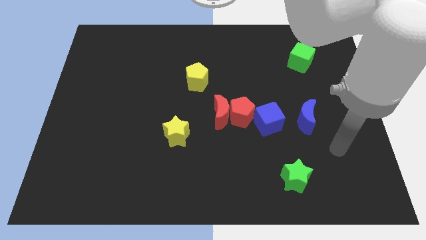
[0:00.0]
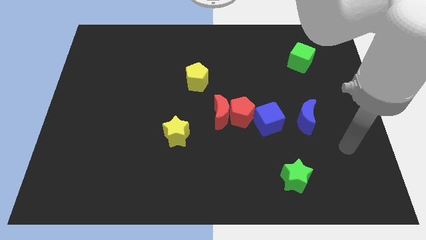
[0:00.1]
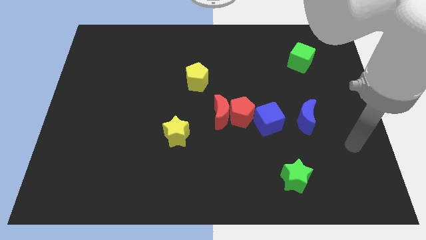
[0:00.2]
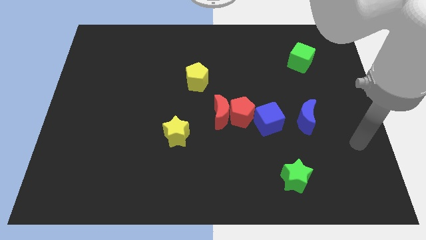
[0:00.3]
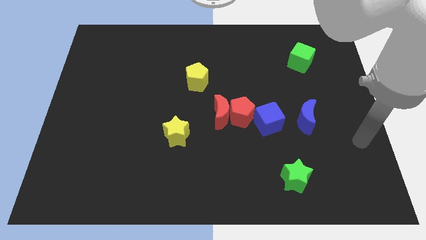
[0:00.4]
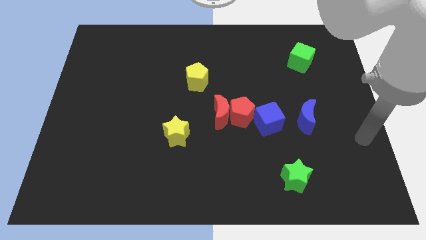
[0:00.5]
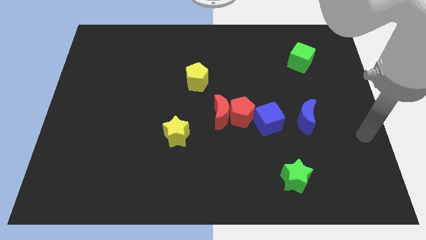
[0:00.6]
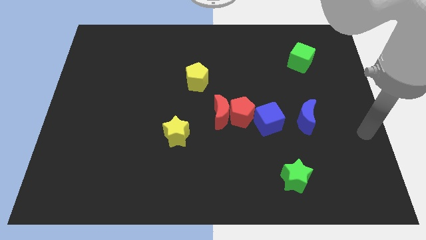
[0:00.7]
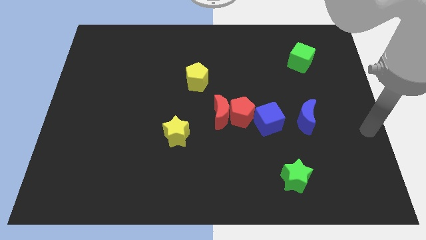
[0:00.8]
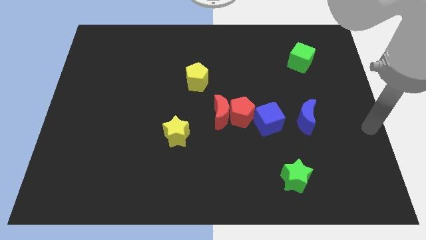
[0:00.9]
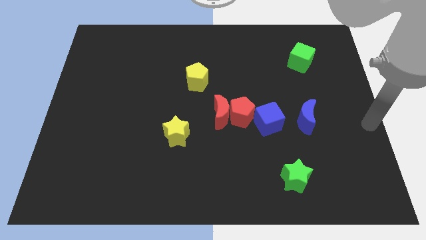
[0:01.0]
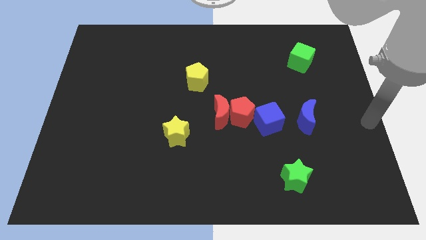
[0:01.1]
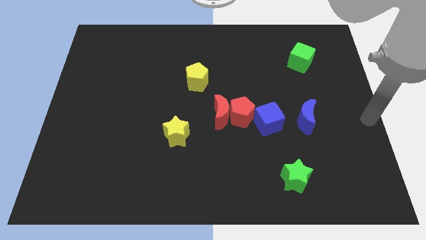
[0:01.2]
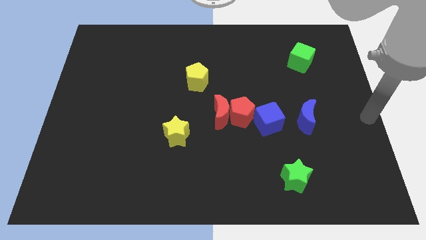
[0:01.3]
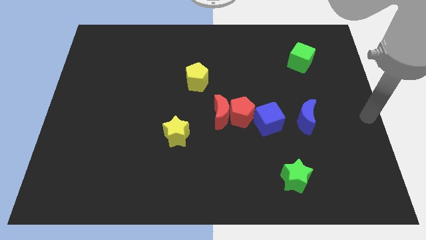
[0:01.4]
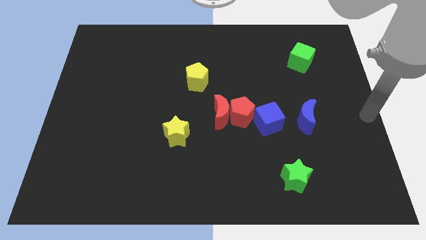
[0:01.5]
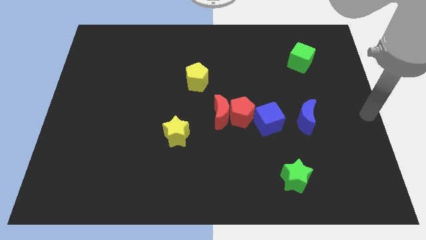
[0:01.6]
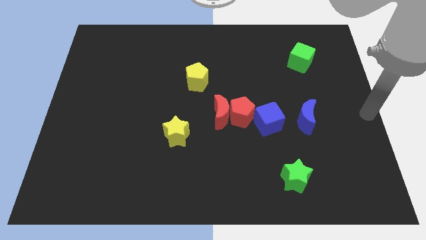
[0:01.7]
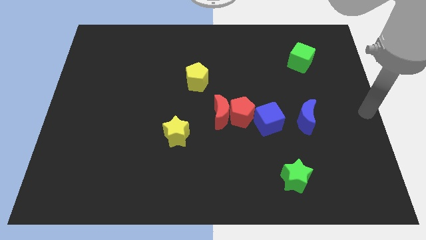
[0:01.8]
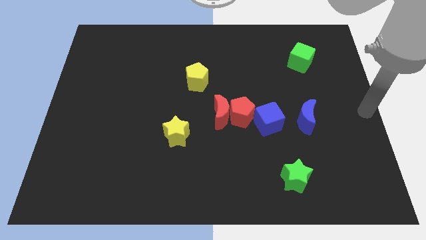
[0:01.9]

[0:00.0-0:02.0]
place your arm at the center right side of the board

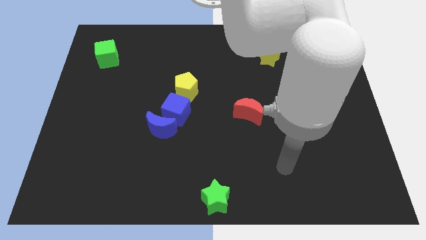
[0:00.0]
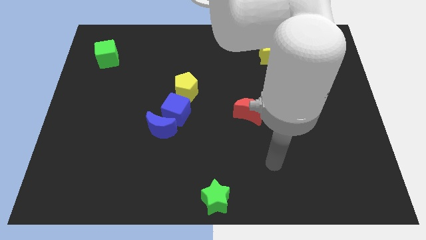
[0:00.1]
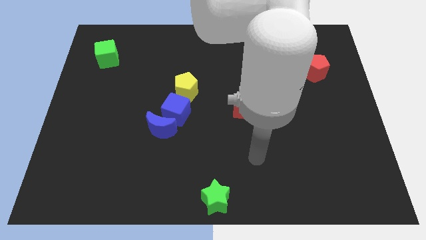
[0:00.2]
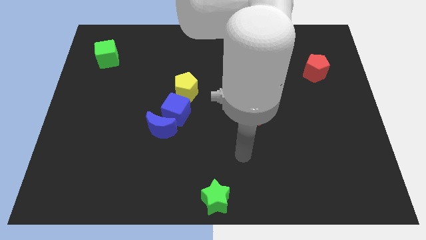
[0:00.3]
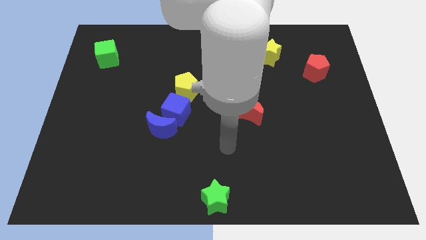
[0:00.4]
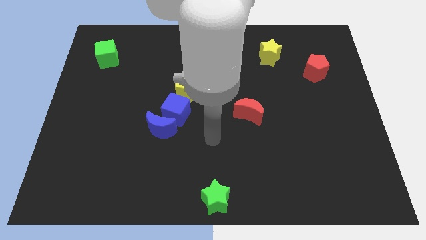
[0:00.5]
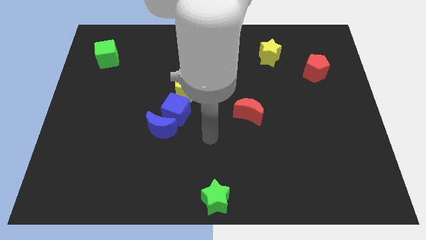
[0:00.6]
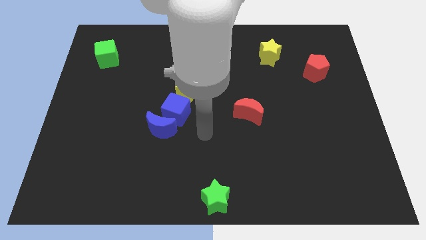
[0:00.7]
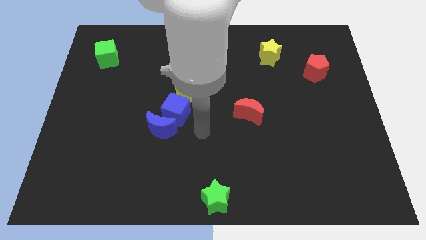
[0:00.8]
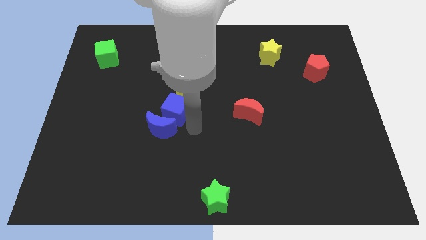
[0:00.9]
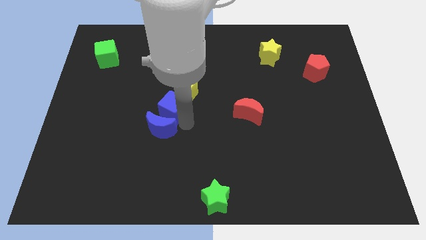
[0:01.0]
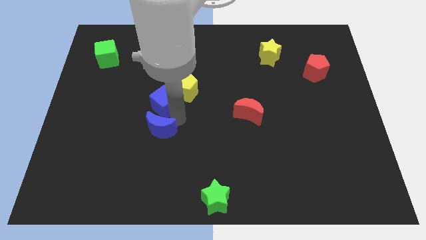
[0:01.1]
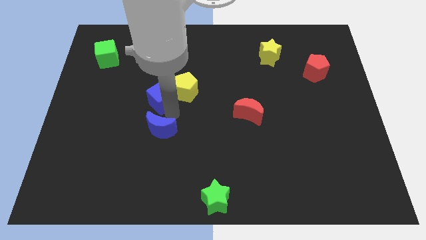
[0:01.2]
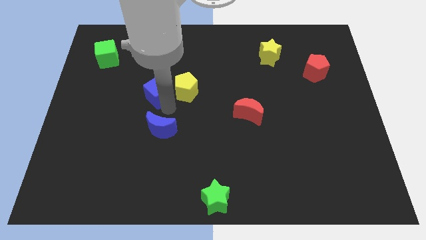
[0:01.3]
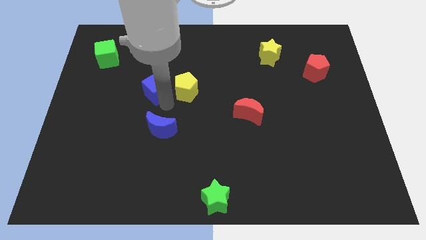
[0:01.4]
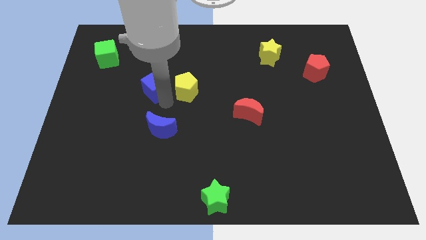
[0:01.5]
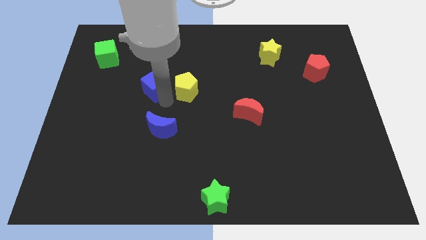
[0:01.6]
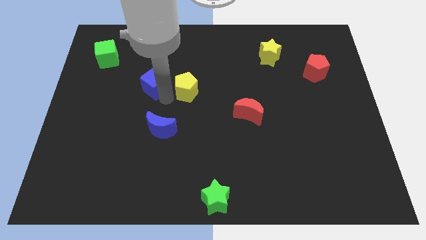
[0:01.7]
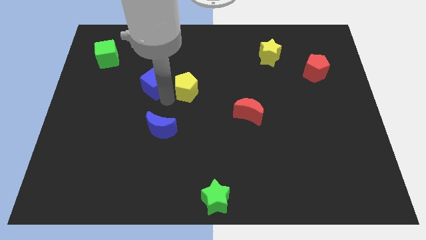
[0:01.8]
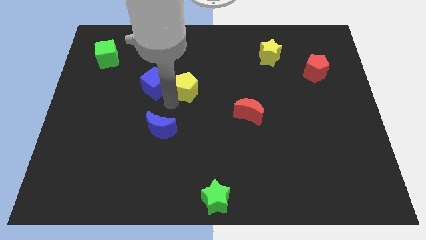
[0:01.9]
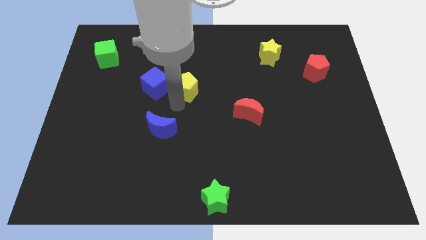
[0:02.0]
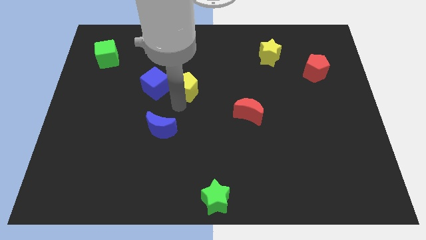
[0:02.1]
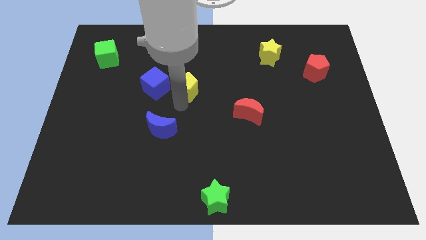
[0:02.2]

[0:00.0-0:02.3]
move the arm into the blue cube

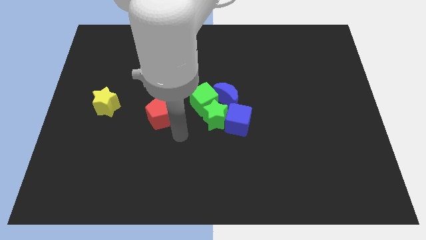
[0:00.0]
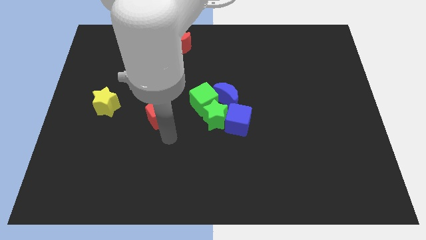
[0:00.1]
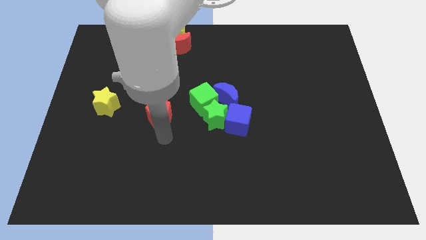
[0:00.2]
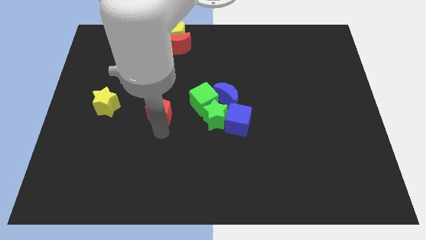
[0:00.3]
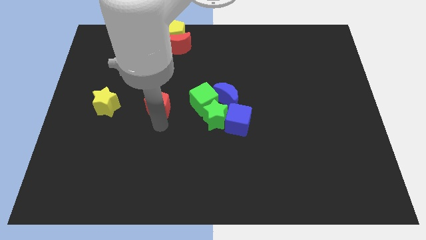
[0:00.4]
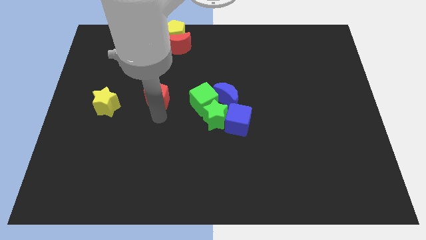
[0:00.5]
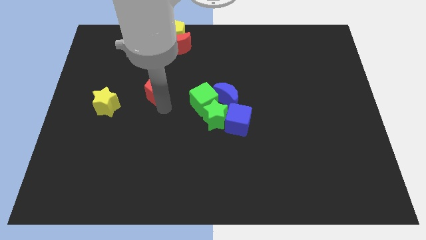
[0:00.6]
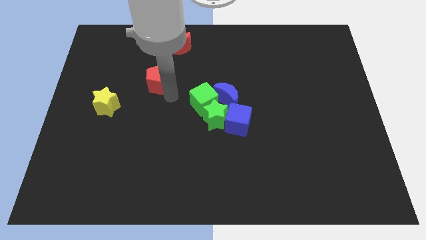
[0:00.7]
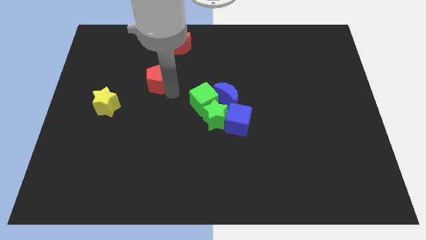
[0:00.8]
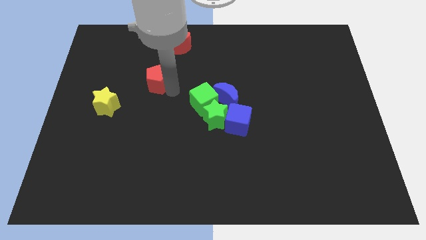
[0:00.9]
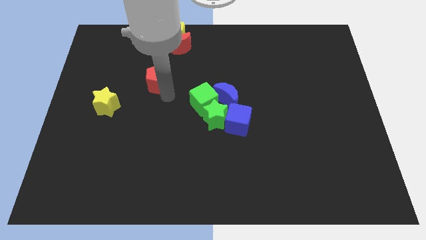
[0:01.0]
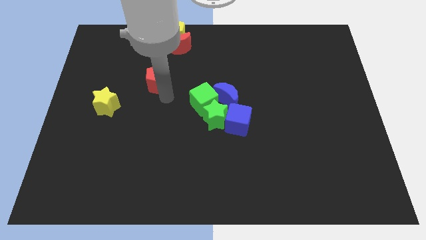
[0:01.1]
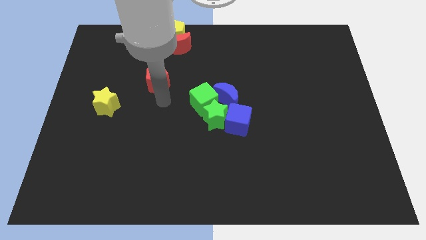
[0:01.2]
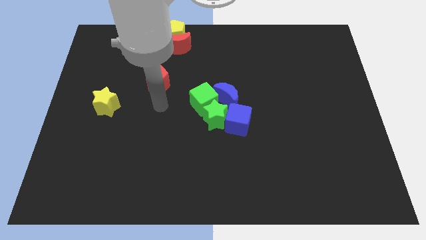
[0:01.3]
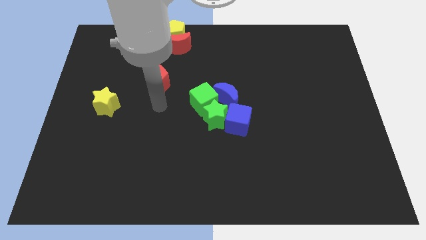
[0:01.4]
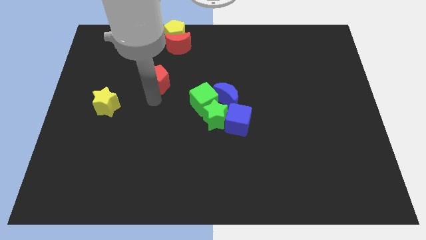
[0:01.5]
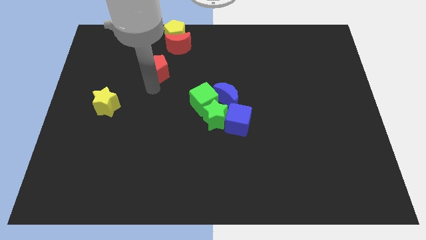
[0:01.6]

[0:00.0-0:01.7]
push the red pentagon to the bottom left side of the red moon

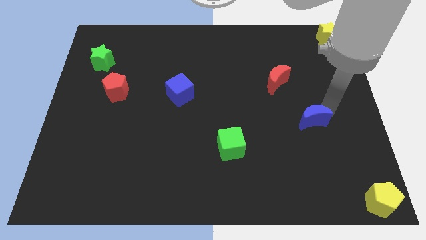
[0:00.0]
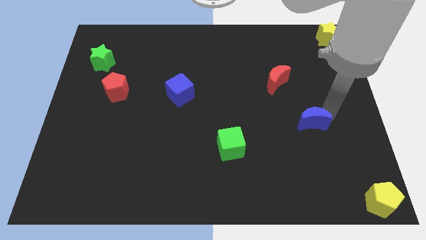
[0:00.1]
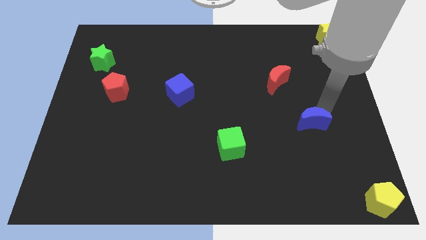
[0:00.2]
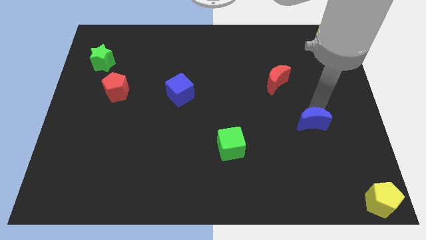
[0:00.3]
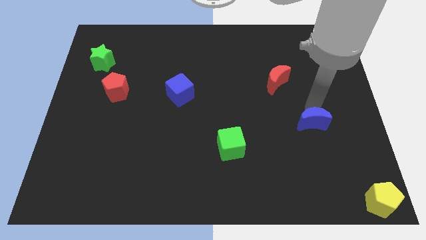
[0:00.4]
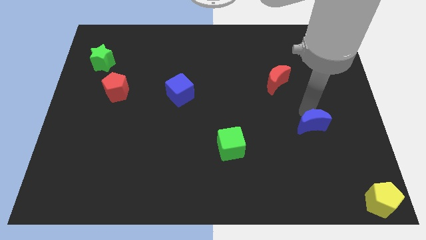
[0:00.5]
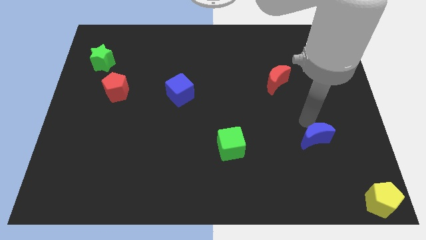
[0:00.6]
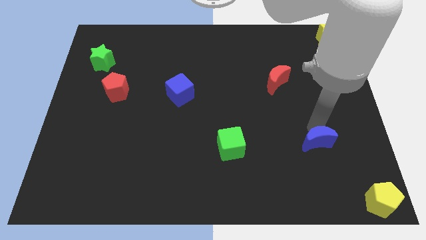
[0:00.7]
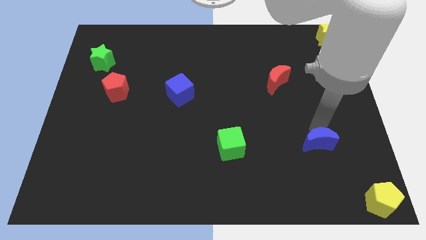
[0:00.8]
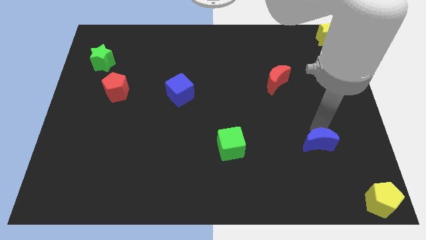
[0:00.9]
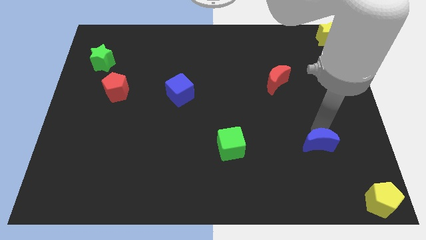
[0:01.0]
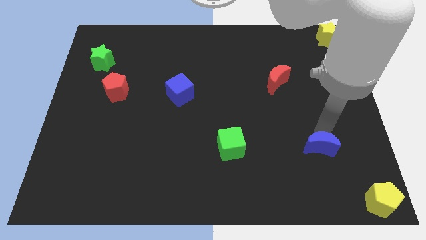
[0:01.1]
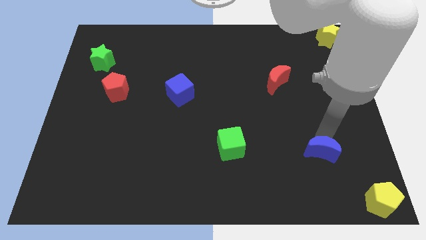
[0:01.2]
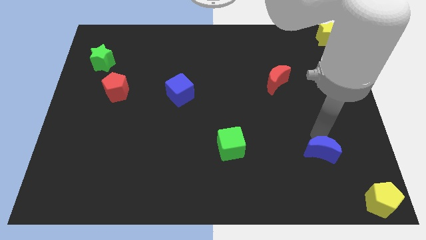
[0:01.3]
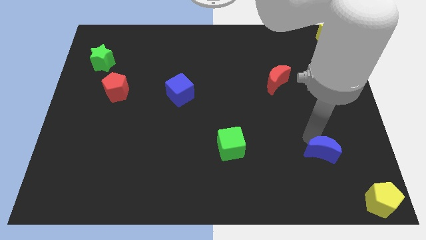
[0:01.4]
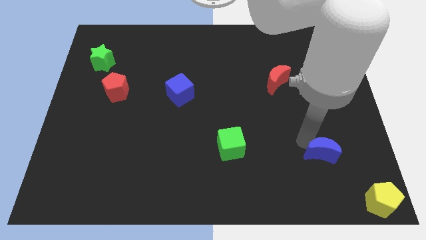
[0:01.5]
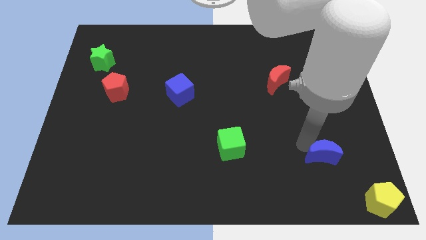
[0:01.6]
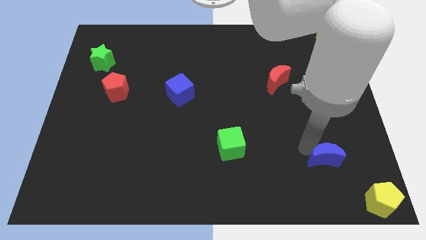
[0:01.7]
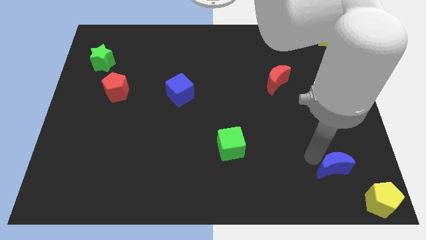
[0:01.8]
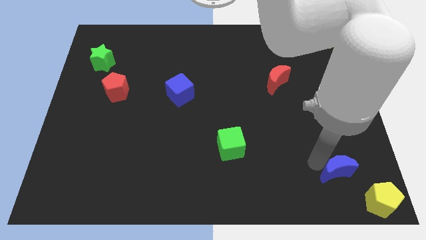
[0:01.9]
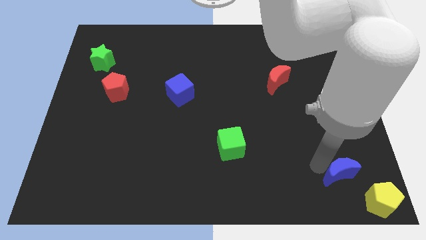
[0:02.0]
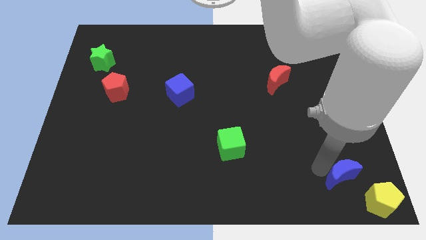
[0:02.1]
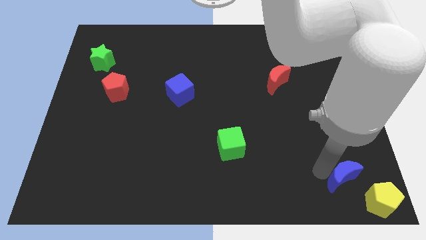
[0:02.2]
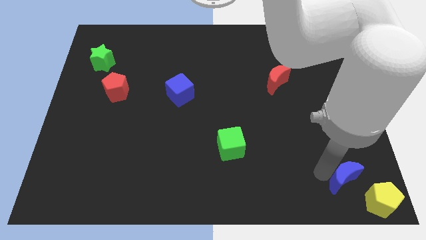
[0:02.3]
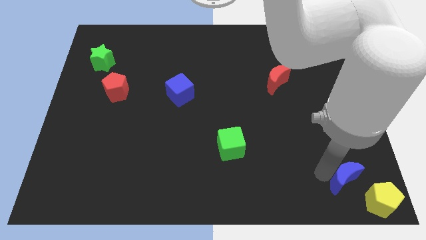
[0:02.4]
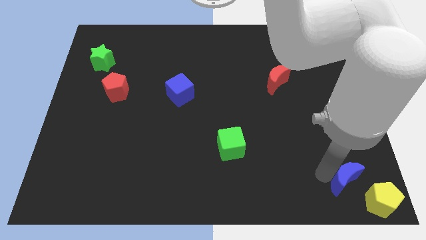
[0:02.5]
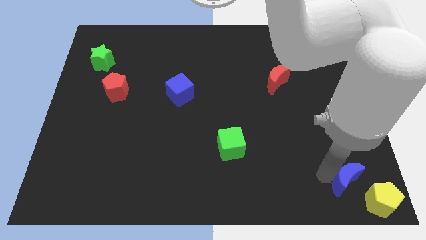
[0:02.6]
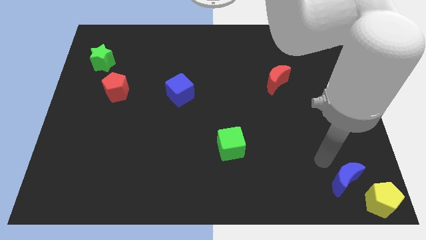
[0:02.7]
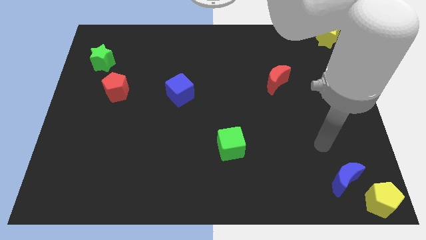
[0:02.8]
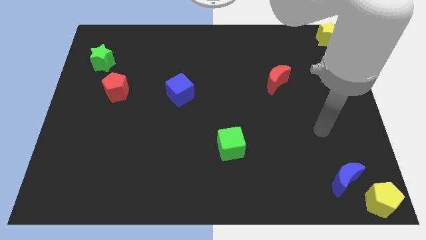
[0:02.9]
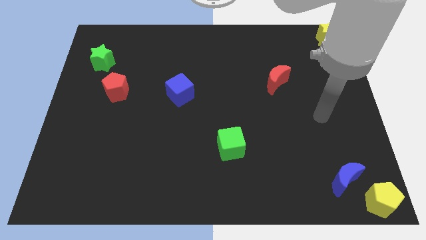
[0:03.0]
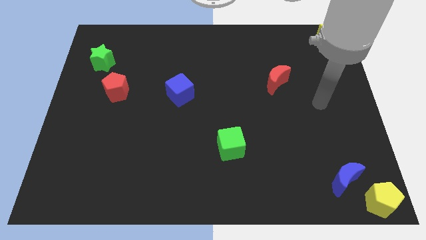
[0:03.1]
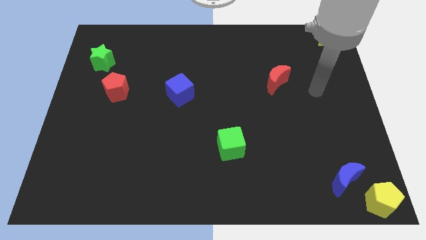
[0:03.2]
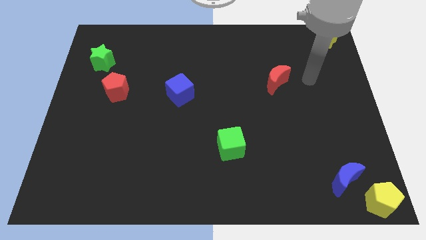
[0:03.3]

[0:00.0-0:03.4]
move the blue moon diagonally above the yellow pentagon
